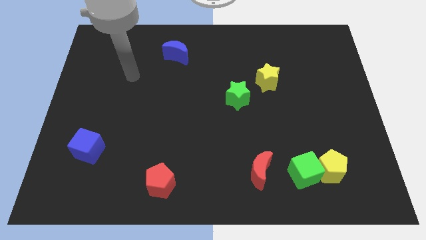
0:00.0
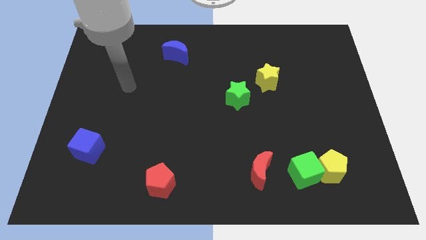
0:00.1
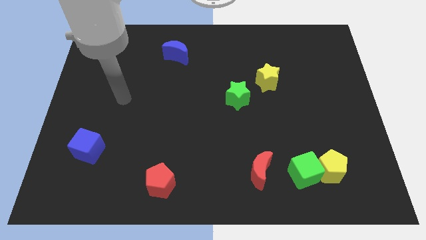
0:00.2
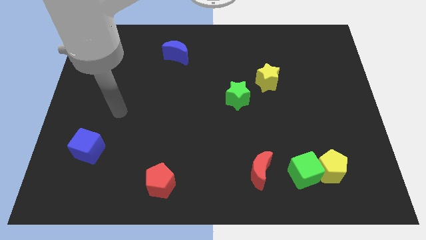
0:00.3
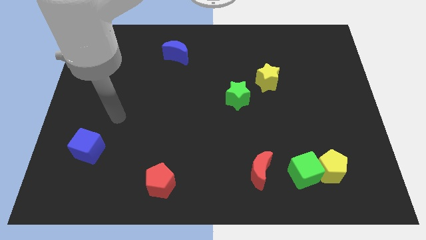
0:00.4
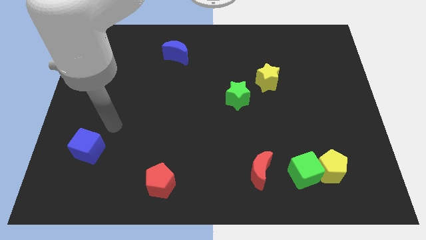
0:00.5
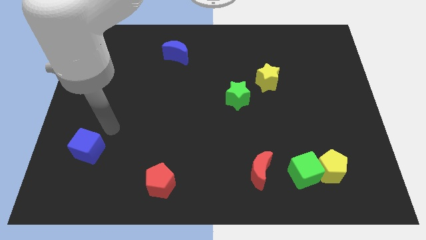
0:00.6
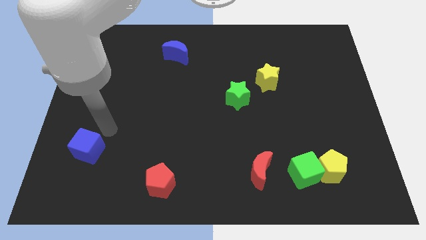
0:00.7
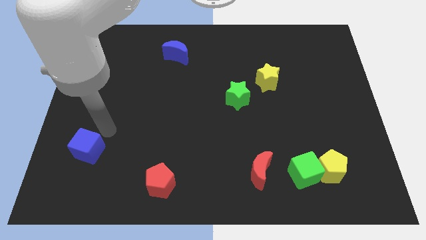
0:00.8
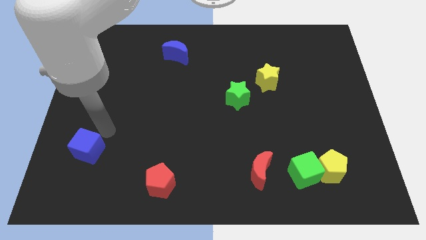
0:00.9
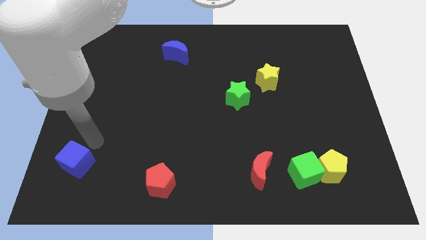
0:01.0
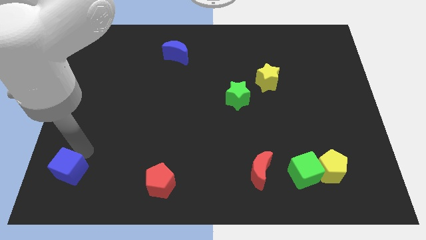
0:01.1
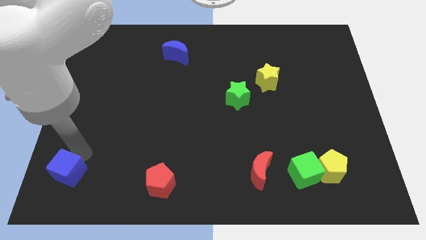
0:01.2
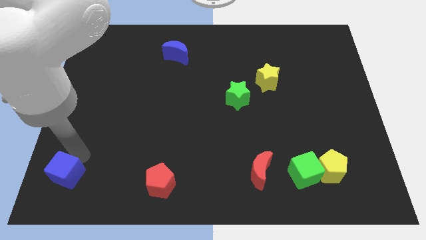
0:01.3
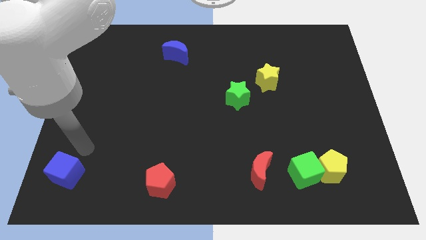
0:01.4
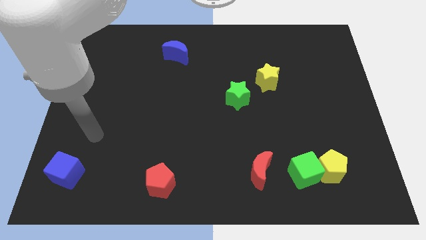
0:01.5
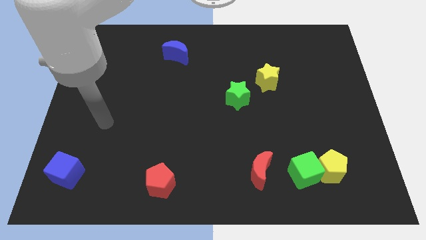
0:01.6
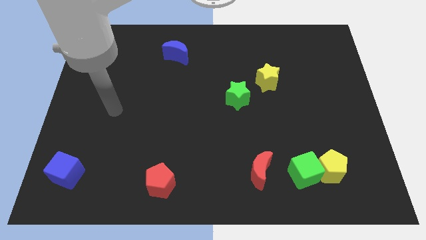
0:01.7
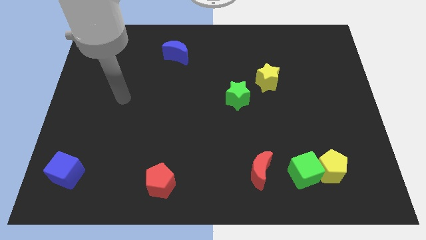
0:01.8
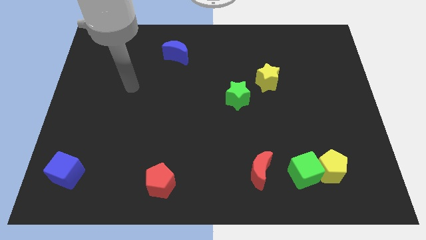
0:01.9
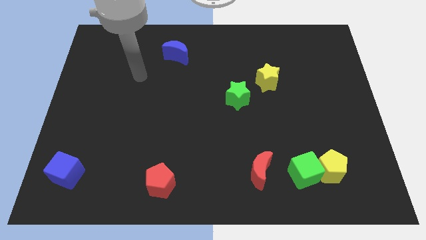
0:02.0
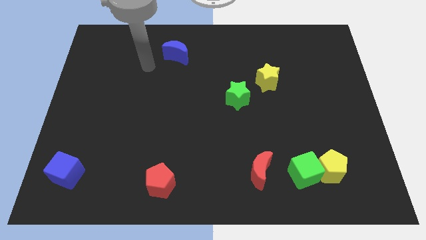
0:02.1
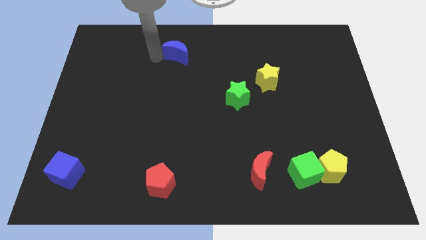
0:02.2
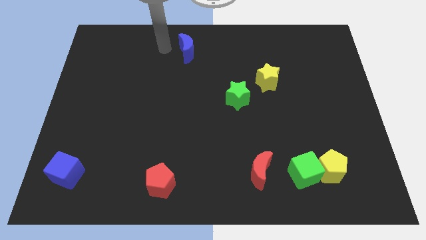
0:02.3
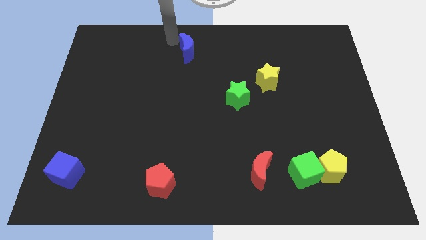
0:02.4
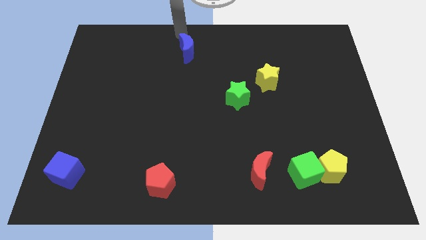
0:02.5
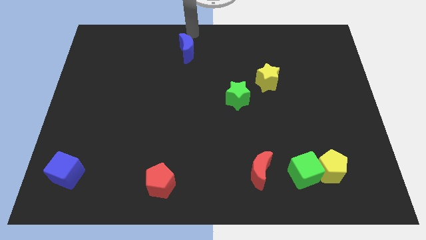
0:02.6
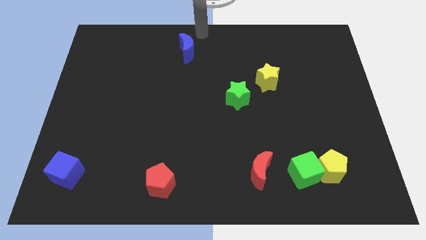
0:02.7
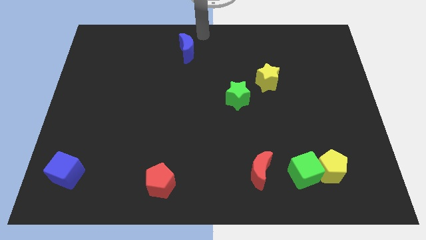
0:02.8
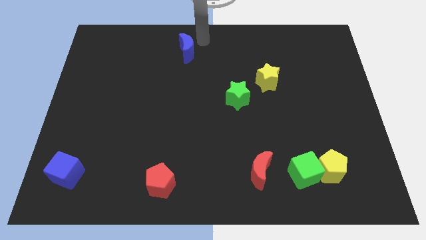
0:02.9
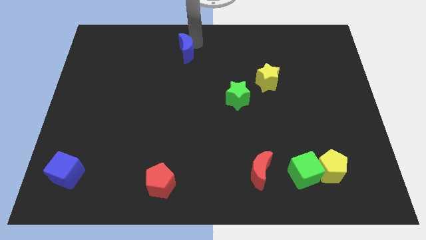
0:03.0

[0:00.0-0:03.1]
slightly move the blue cube towards down

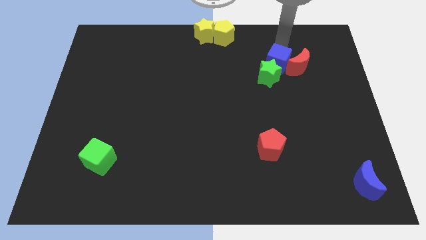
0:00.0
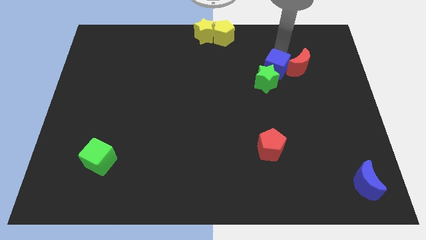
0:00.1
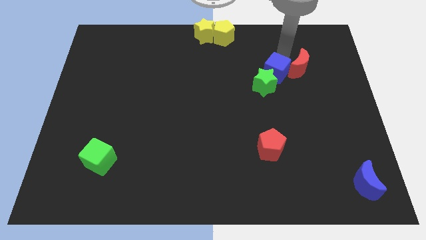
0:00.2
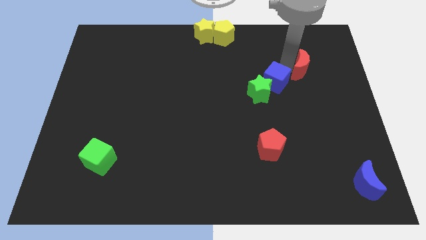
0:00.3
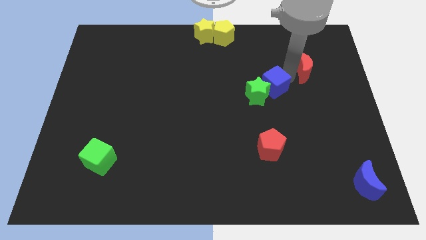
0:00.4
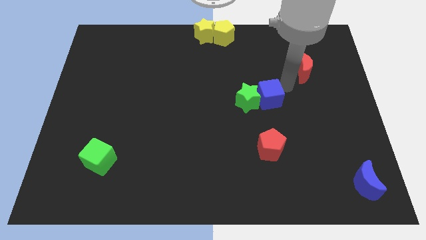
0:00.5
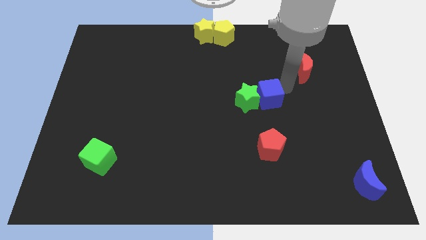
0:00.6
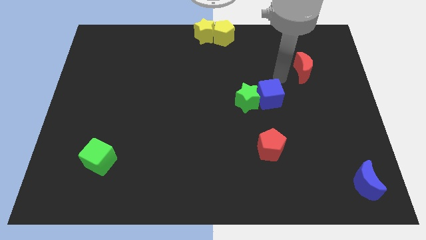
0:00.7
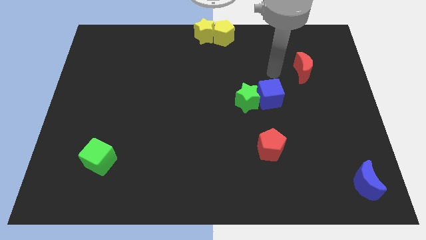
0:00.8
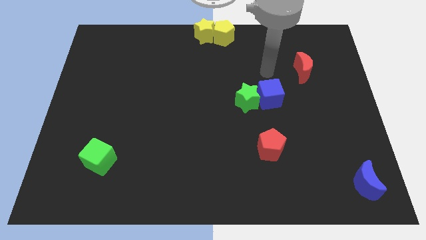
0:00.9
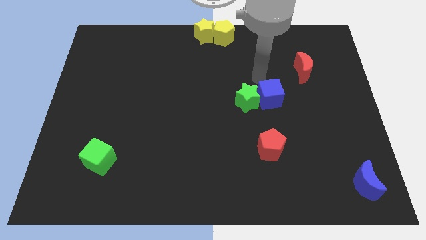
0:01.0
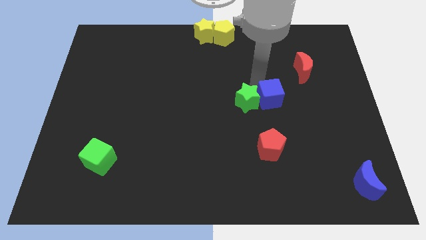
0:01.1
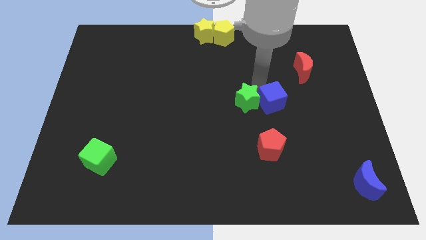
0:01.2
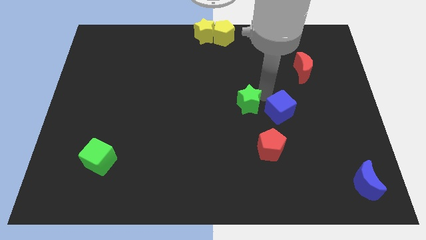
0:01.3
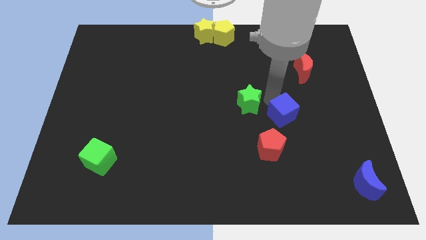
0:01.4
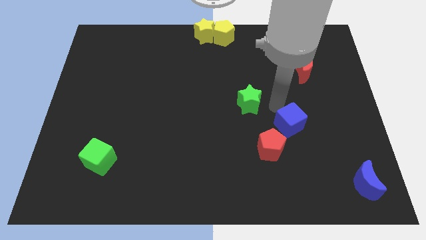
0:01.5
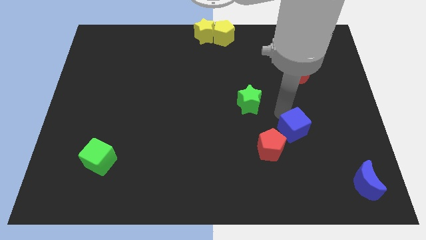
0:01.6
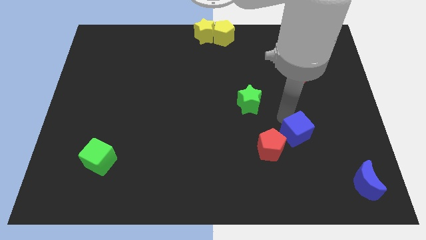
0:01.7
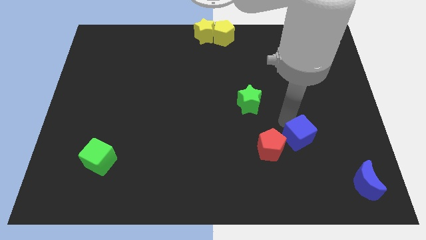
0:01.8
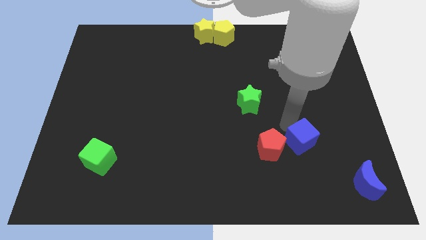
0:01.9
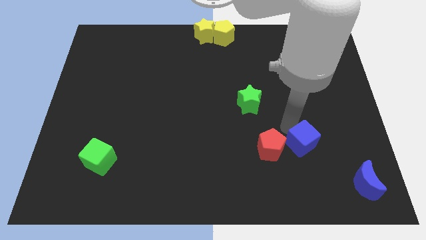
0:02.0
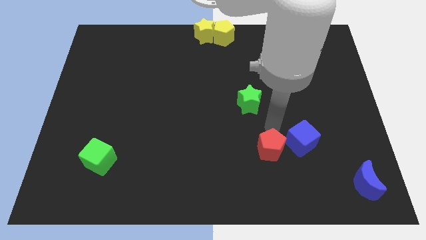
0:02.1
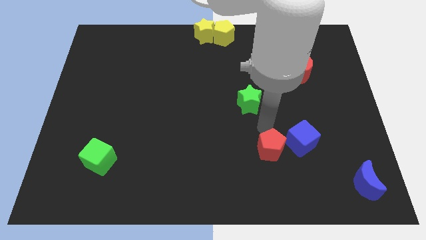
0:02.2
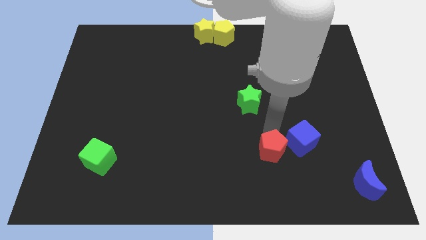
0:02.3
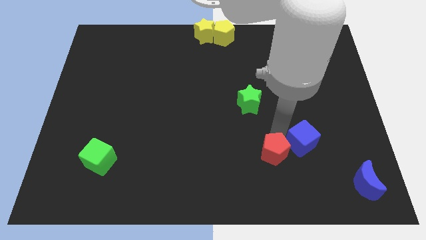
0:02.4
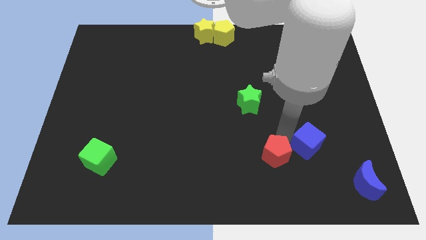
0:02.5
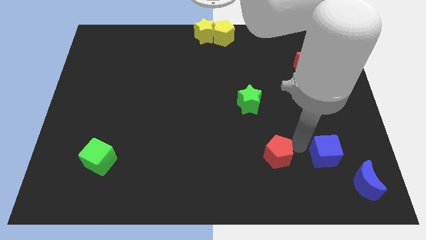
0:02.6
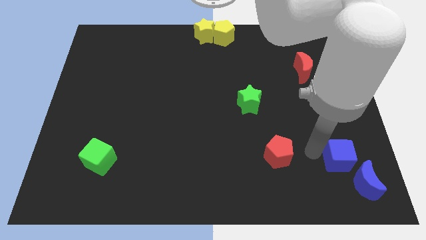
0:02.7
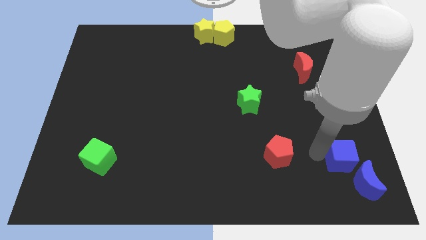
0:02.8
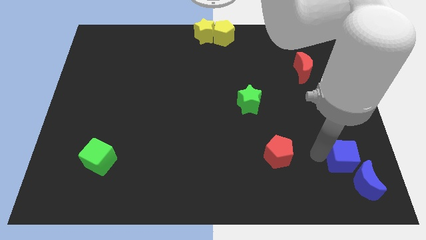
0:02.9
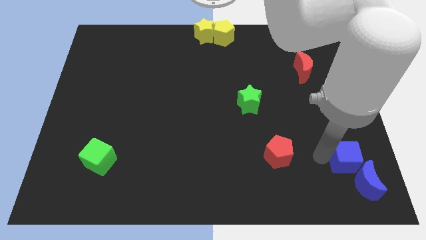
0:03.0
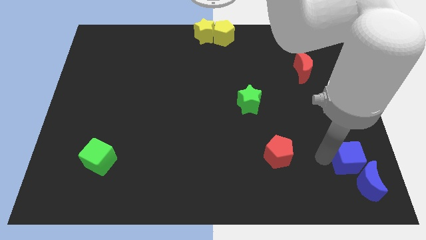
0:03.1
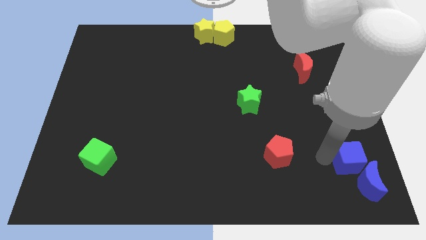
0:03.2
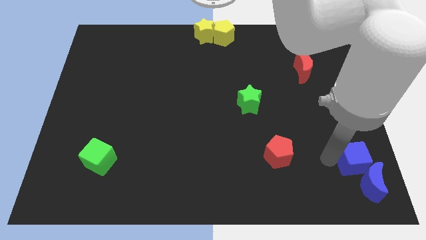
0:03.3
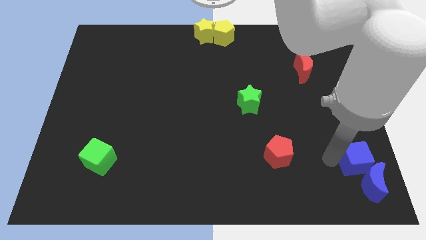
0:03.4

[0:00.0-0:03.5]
push blue cube in to blue moon

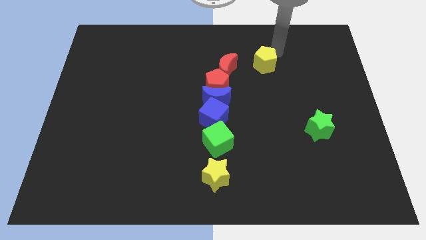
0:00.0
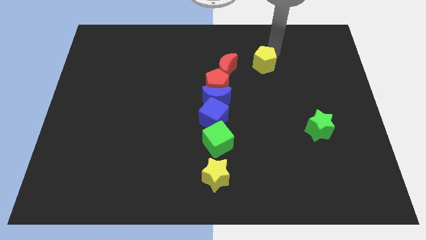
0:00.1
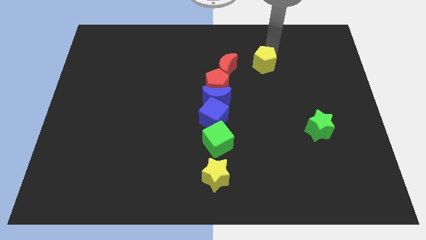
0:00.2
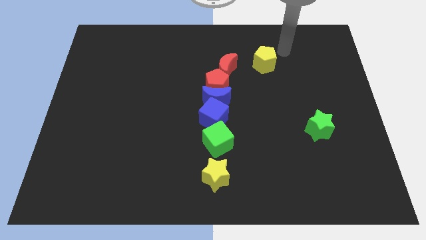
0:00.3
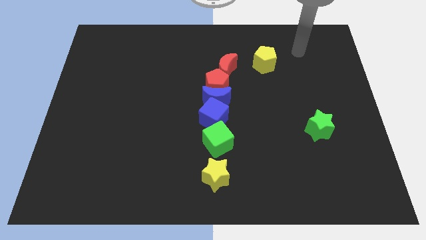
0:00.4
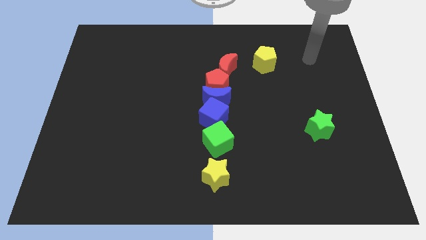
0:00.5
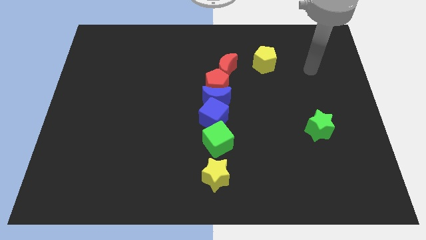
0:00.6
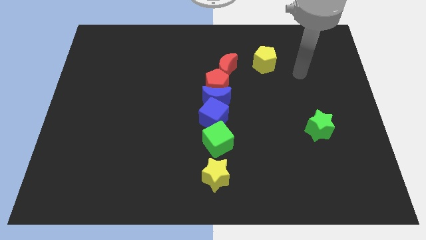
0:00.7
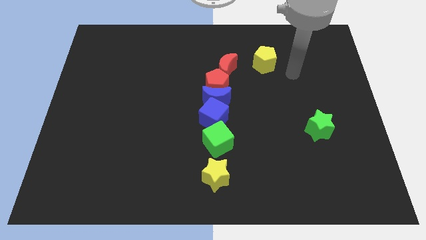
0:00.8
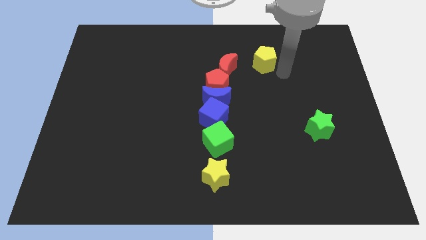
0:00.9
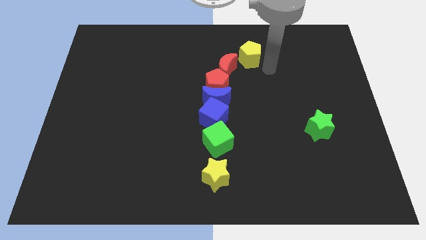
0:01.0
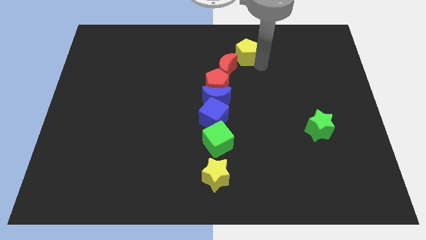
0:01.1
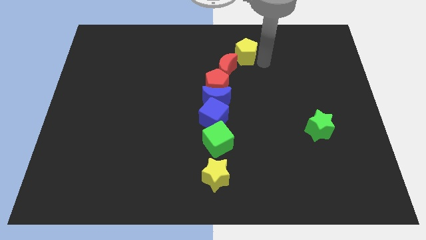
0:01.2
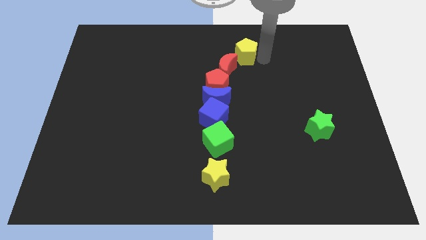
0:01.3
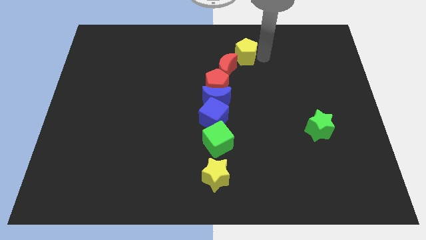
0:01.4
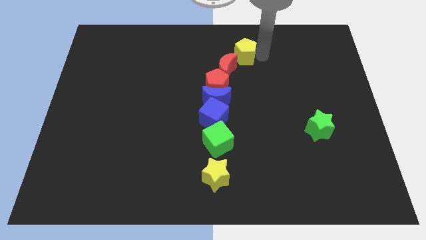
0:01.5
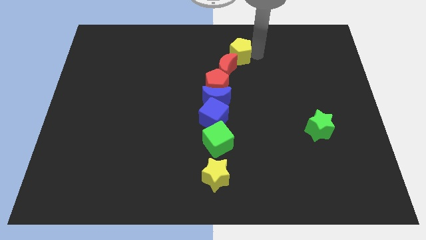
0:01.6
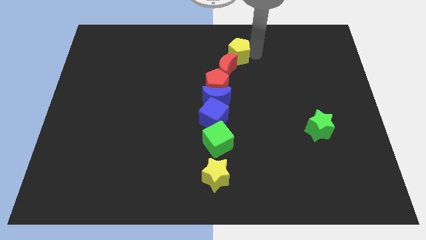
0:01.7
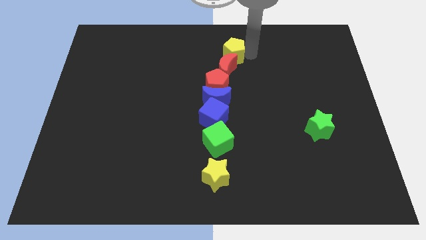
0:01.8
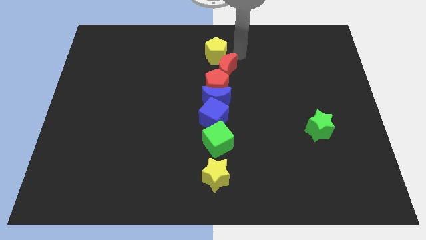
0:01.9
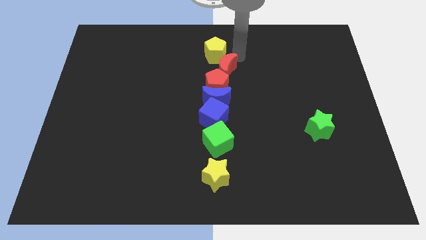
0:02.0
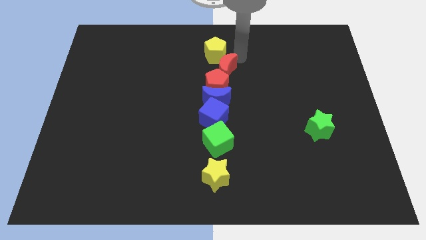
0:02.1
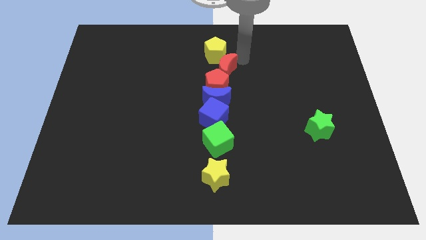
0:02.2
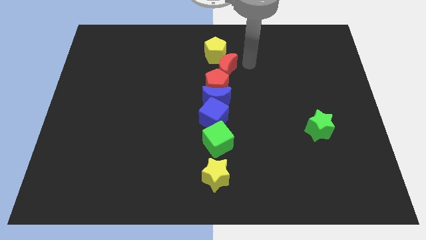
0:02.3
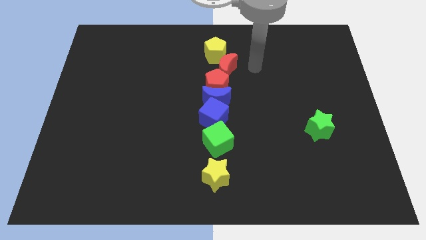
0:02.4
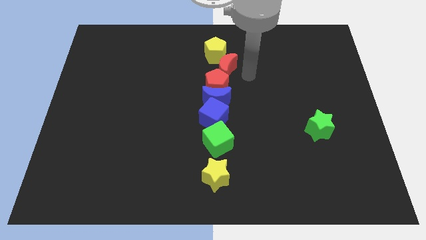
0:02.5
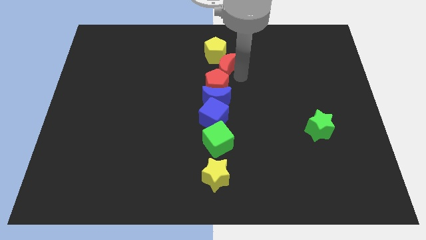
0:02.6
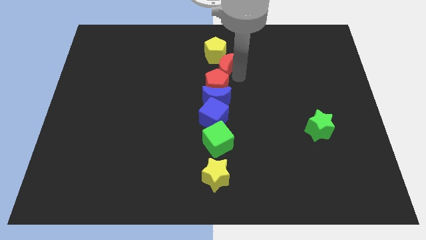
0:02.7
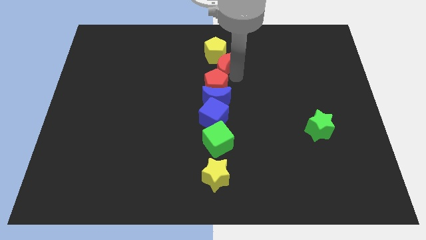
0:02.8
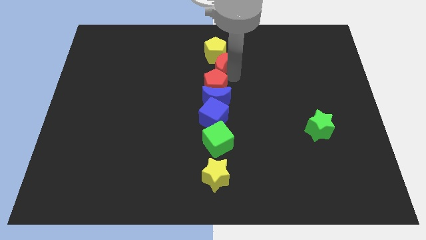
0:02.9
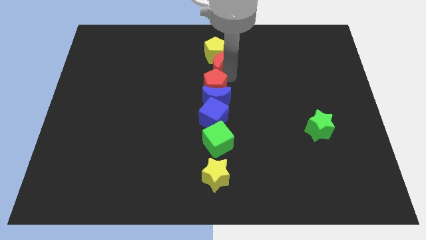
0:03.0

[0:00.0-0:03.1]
place the yellow pentagon above the red crescent
